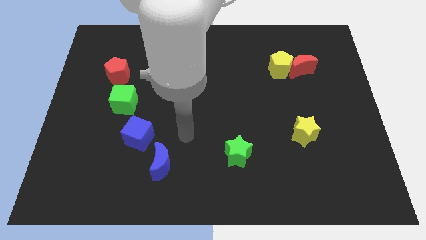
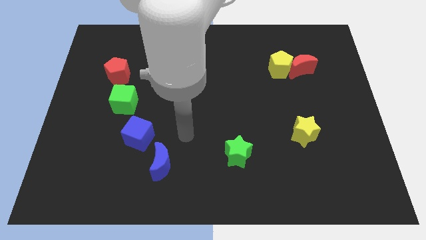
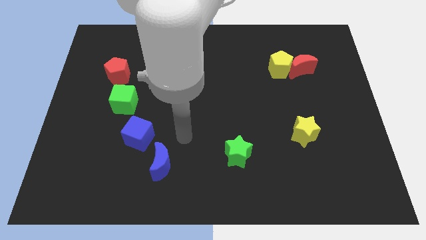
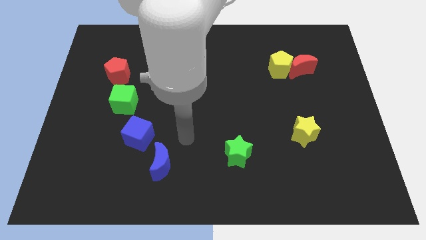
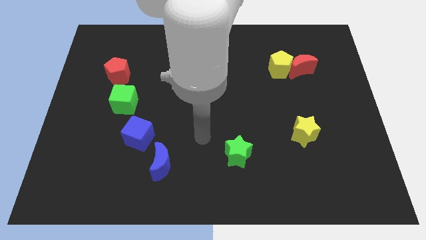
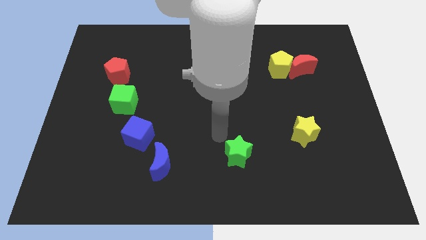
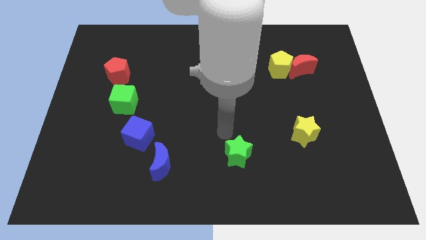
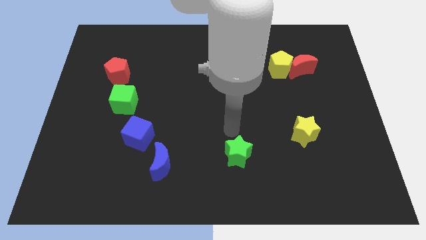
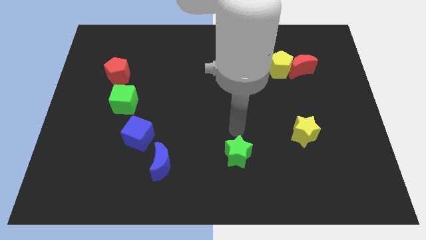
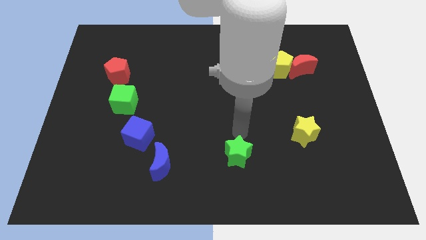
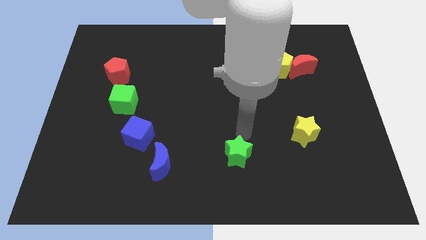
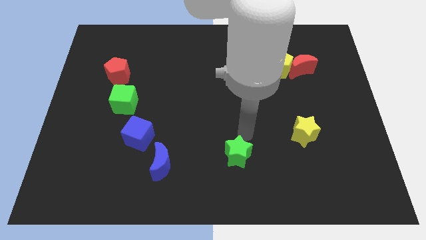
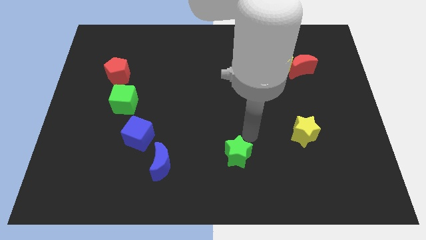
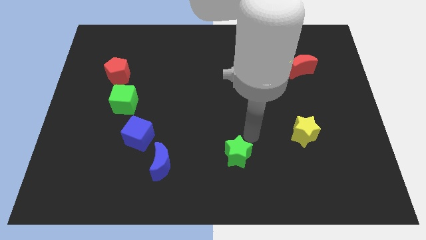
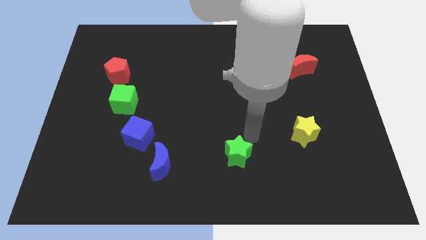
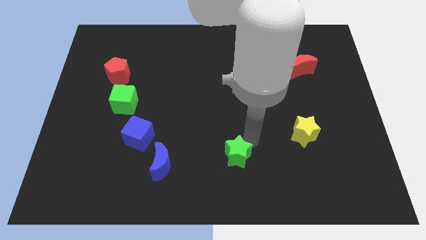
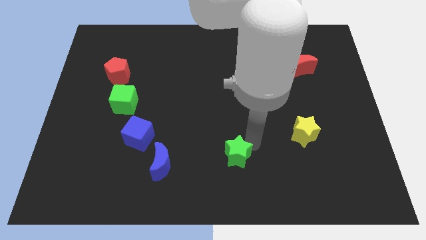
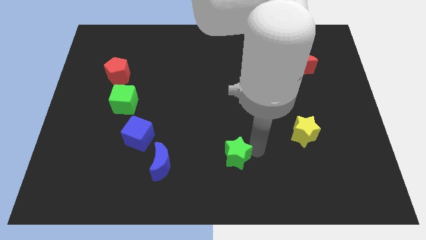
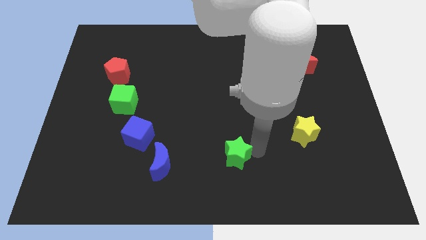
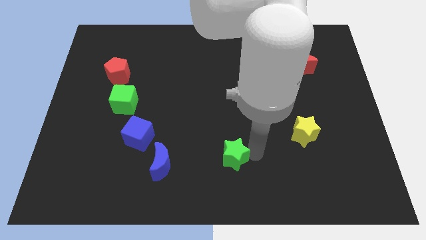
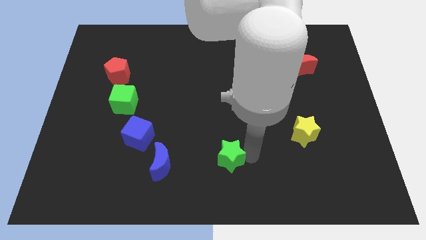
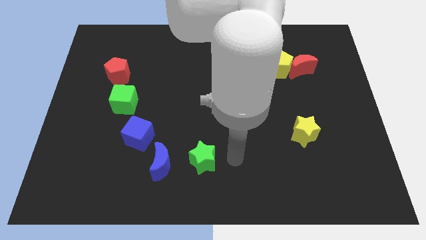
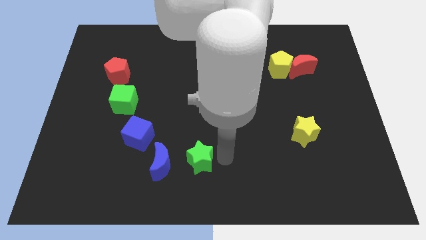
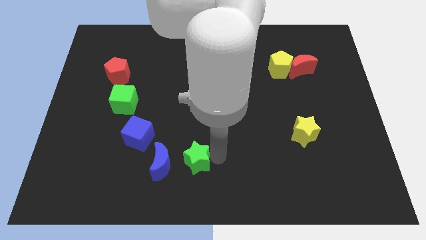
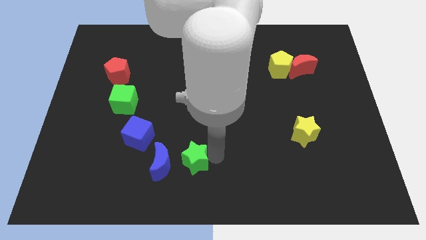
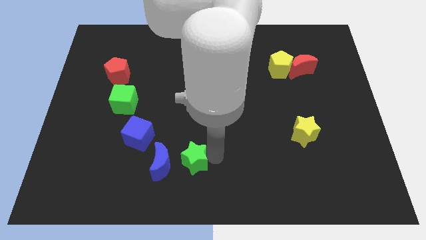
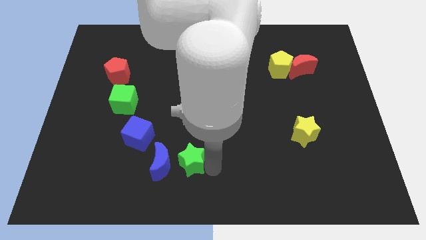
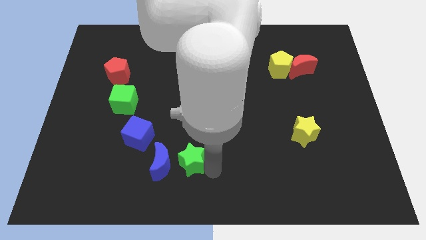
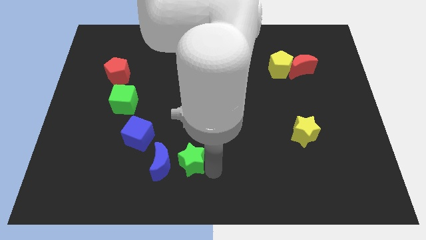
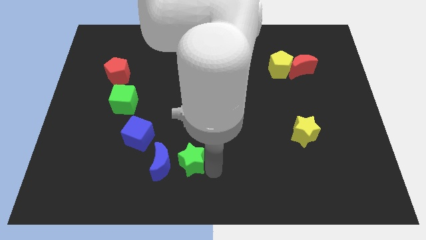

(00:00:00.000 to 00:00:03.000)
move the green star to the right of the blue crescent

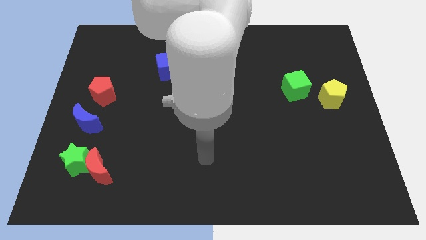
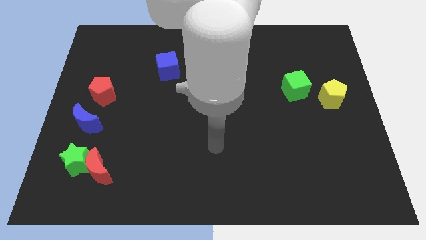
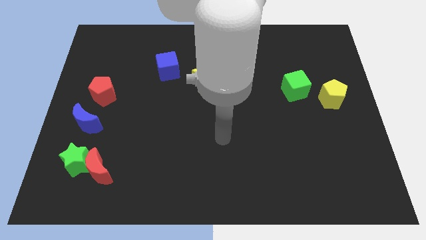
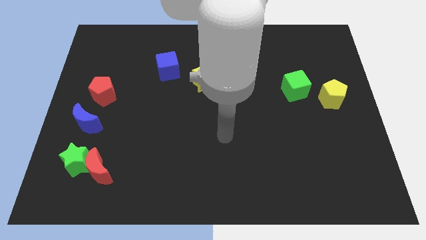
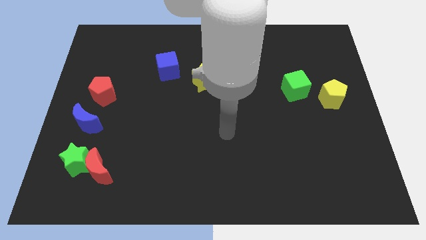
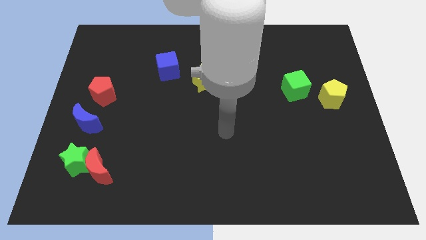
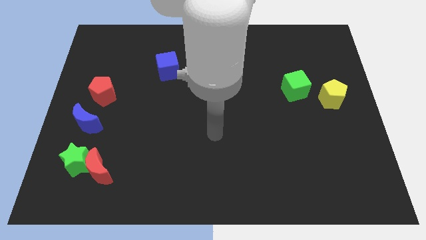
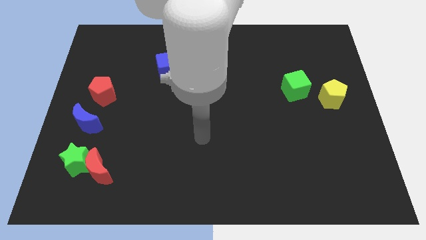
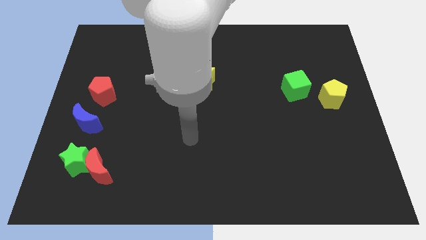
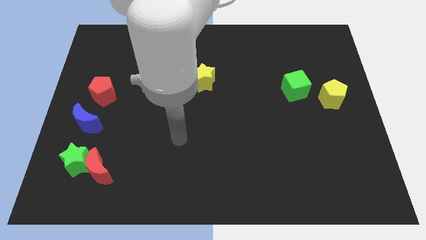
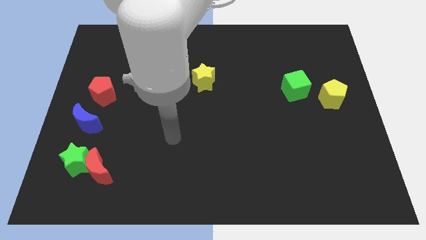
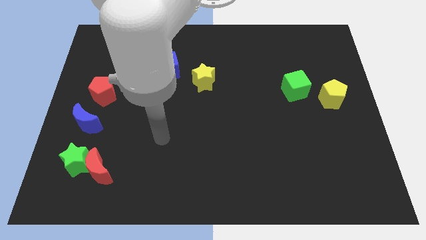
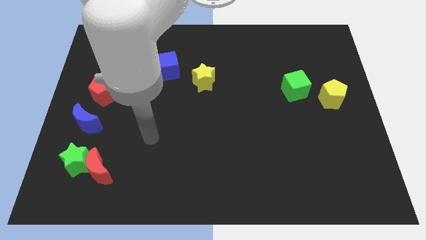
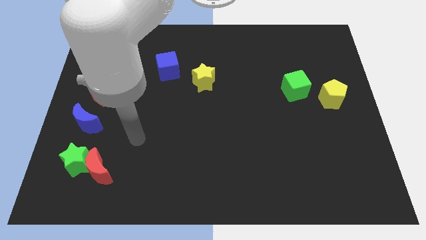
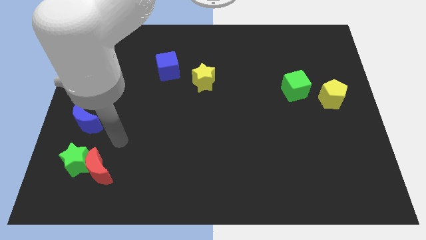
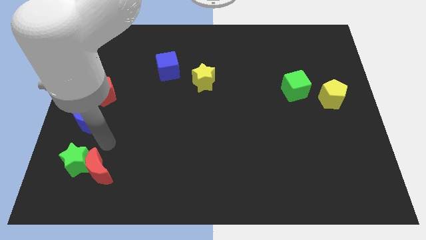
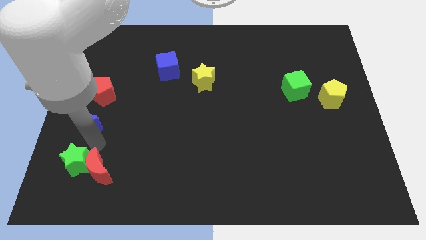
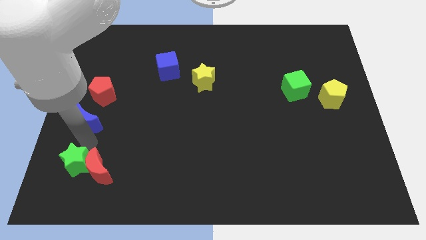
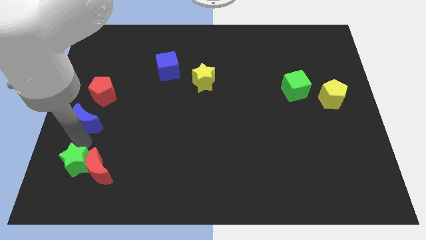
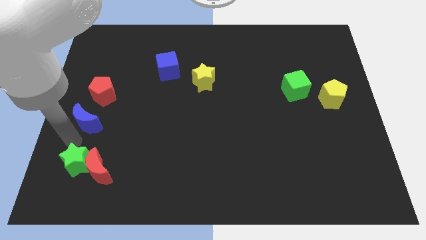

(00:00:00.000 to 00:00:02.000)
move your arm towards the left

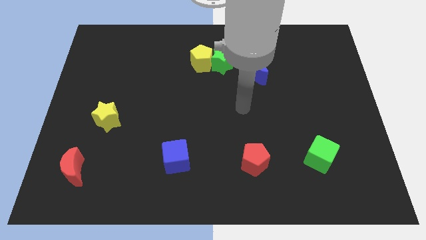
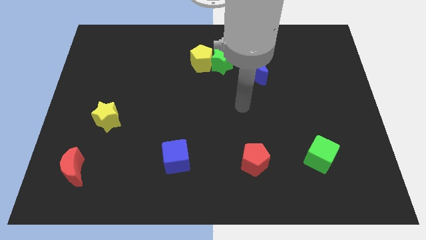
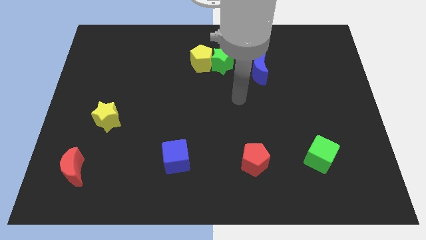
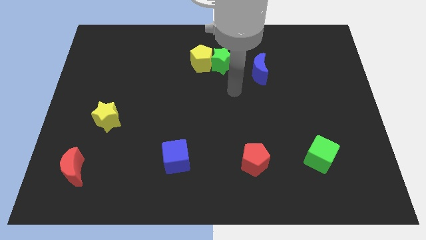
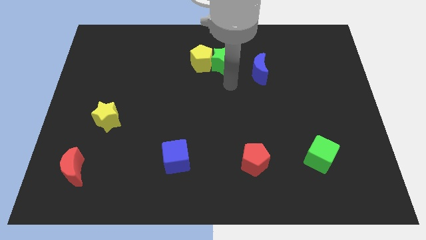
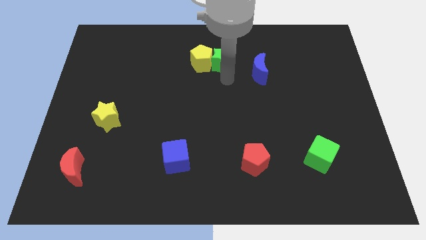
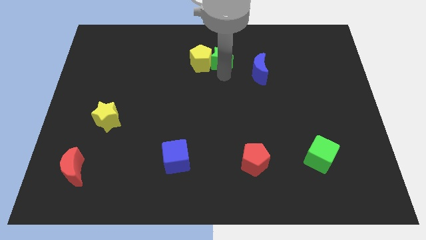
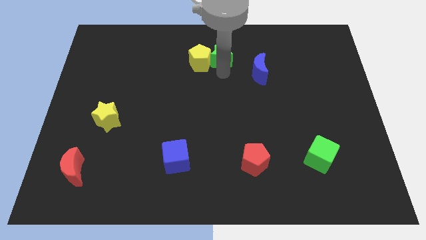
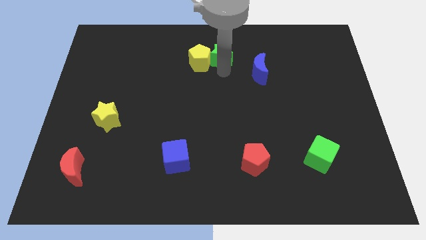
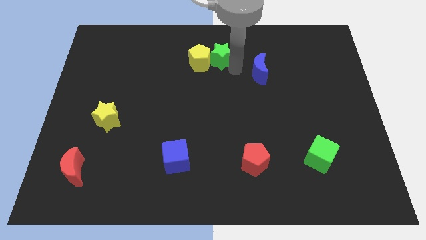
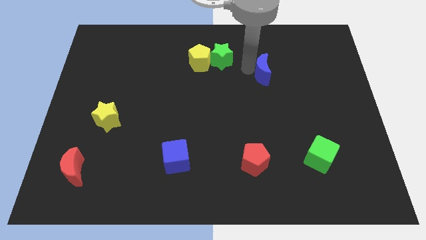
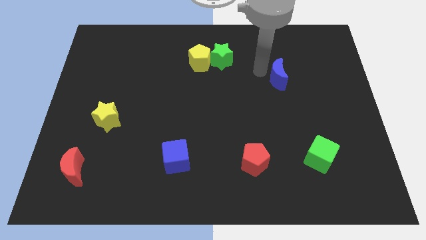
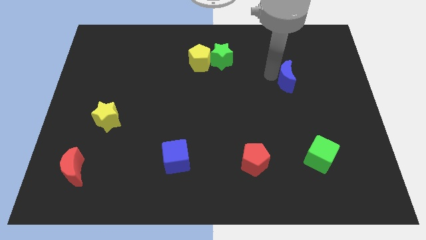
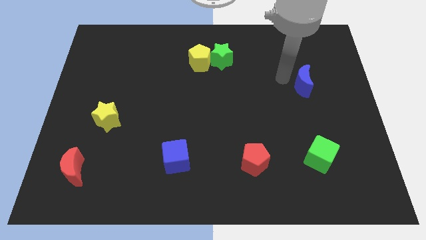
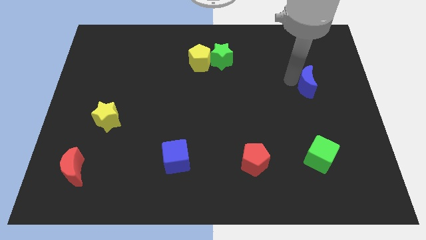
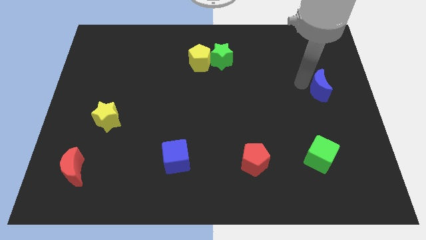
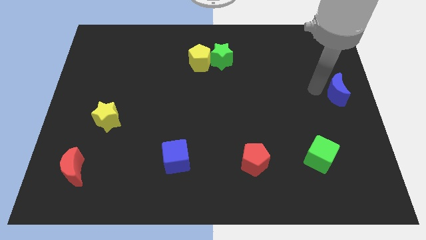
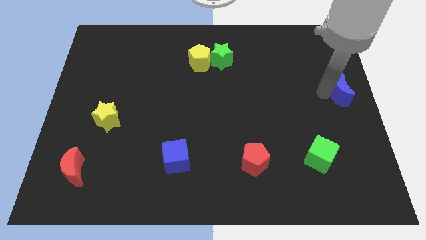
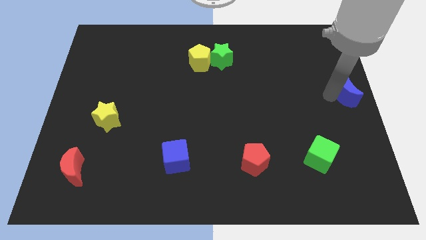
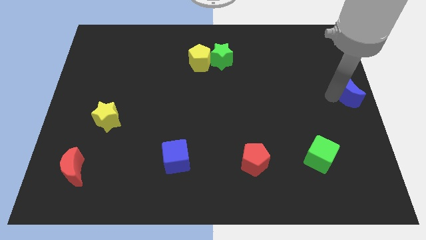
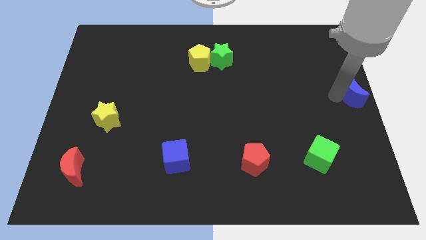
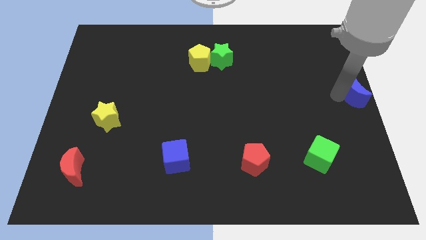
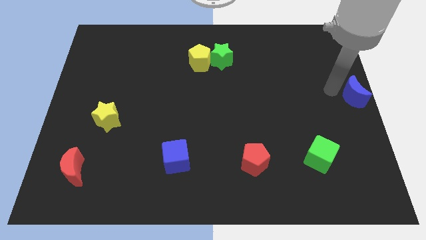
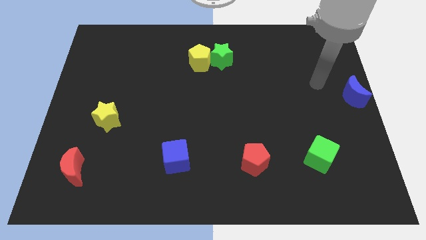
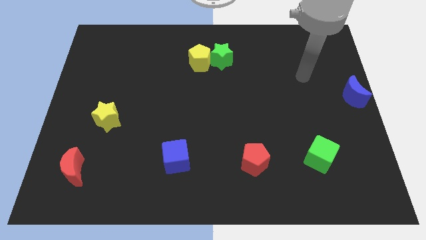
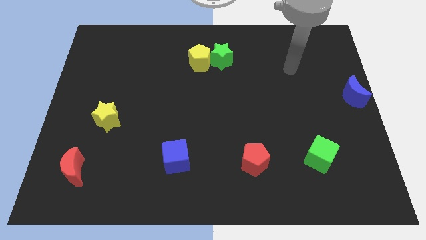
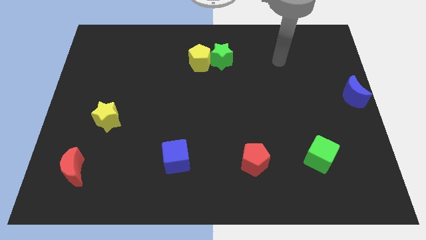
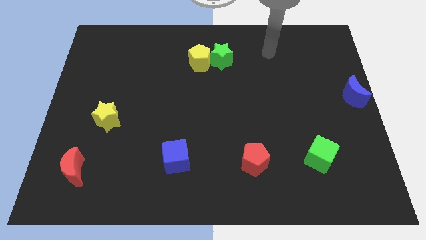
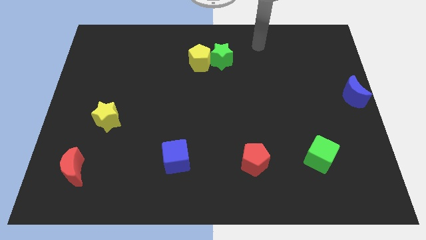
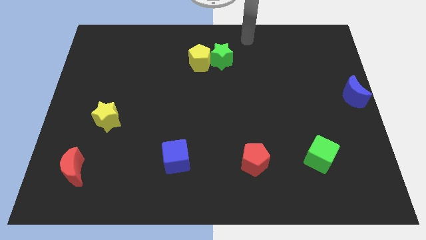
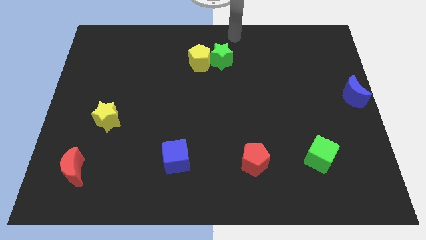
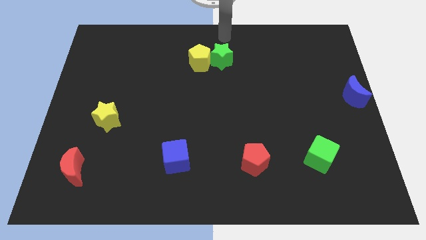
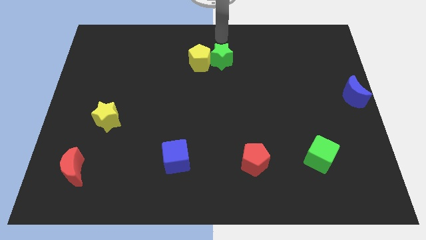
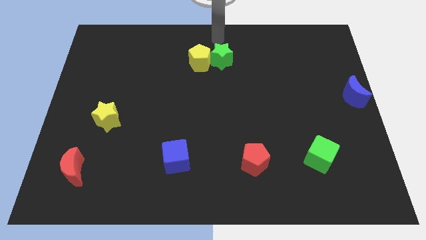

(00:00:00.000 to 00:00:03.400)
place the blue moon to the center right side of the board

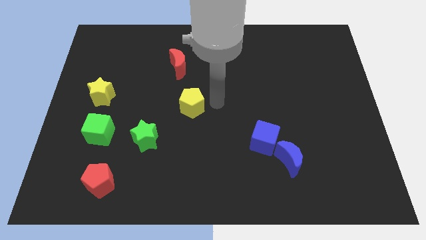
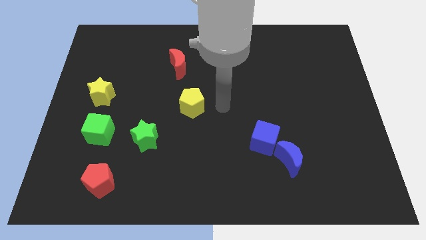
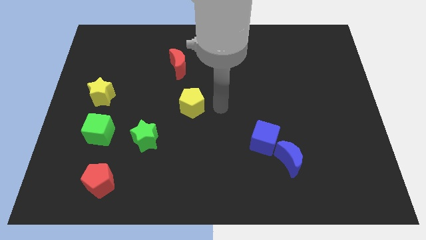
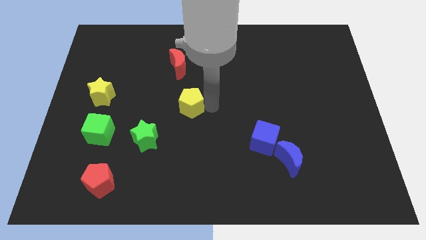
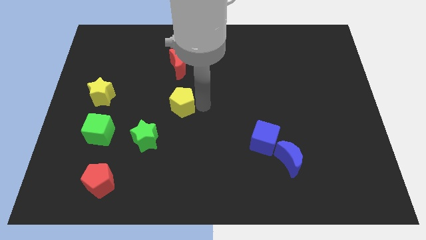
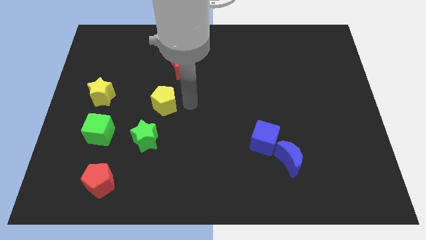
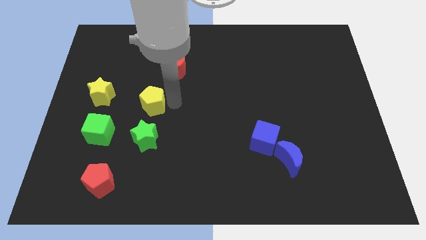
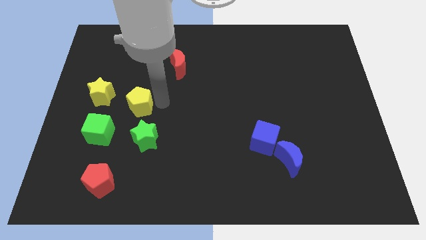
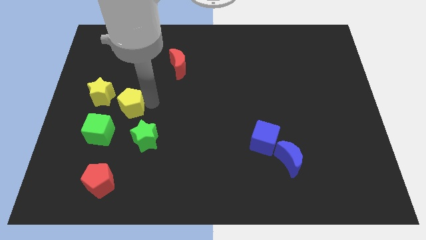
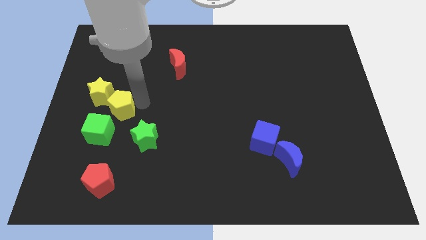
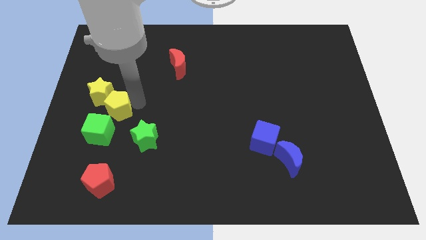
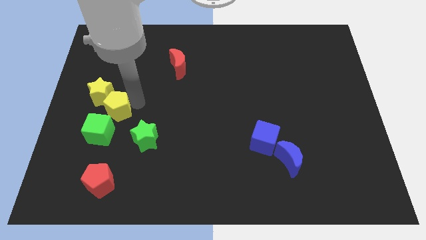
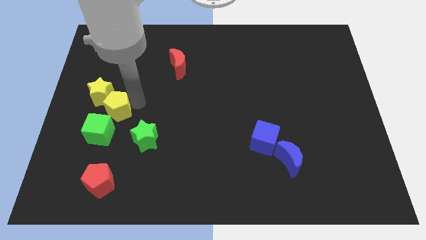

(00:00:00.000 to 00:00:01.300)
move the yellow pentagon towards the bottom right side of the yellow star
